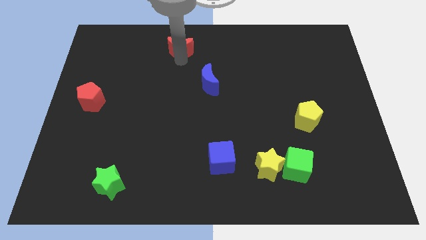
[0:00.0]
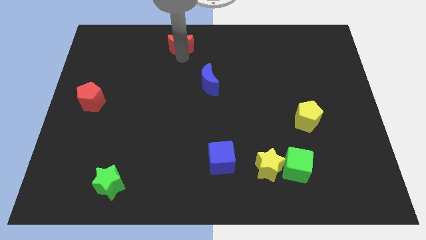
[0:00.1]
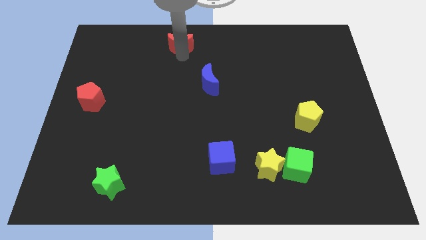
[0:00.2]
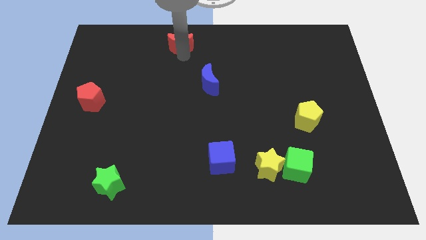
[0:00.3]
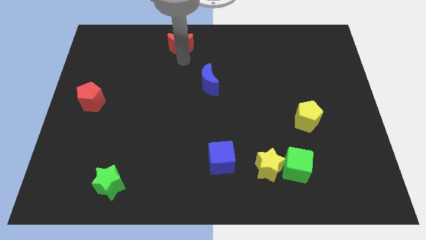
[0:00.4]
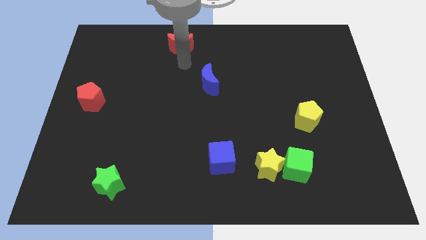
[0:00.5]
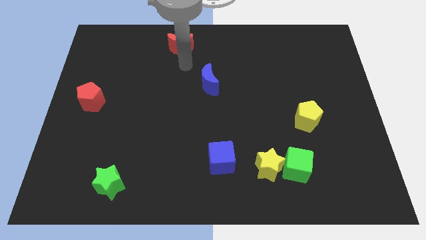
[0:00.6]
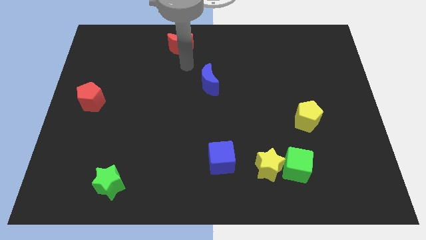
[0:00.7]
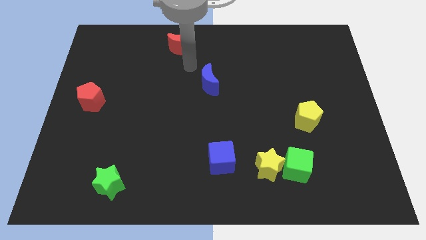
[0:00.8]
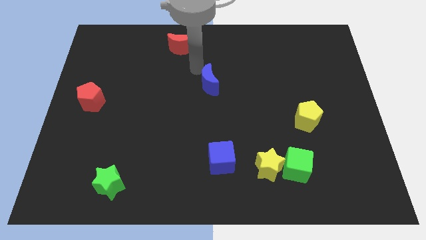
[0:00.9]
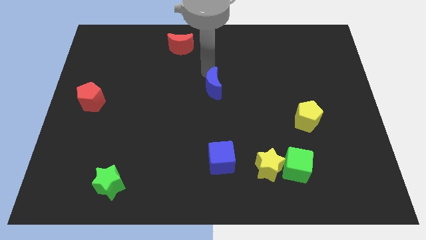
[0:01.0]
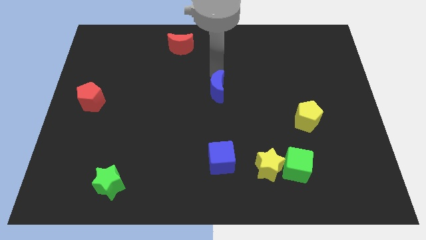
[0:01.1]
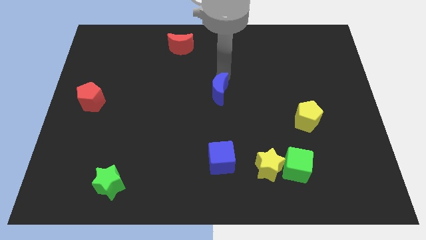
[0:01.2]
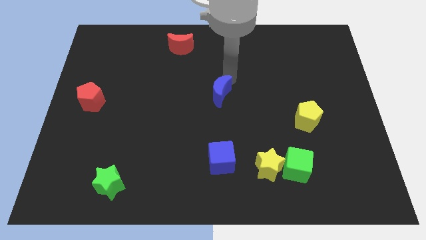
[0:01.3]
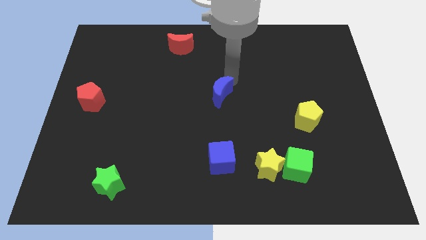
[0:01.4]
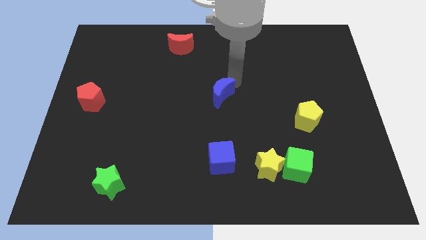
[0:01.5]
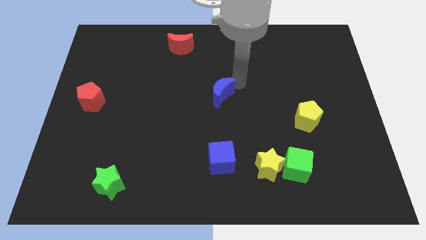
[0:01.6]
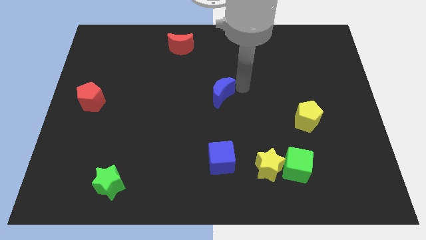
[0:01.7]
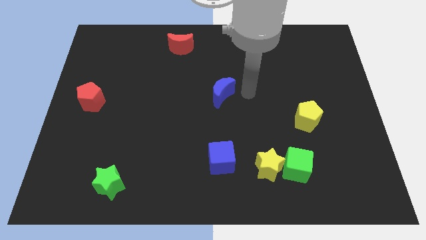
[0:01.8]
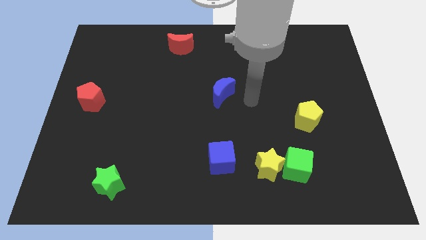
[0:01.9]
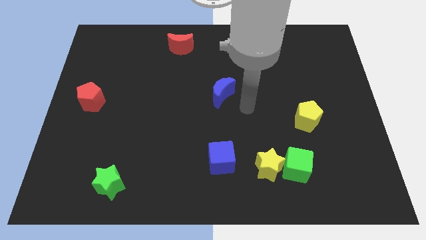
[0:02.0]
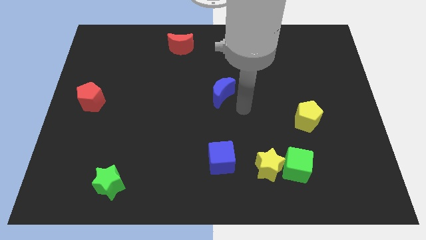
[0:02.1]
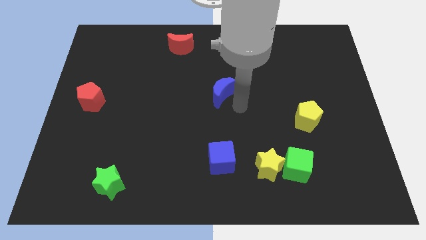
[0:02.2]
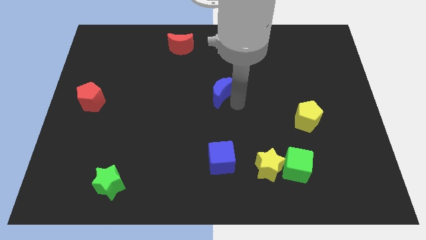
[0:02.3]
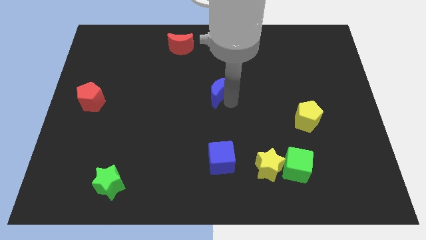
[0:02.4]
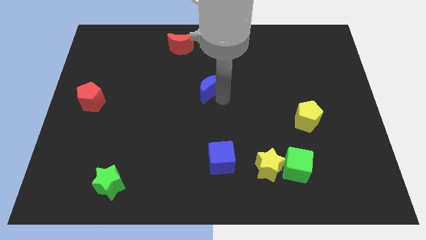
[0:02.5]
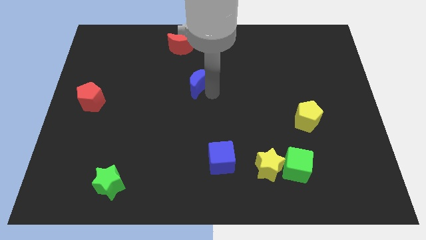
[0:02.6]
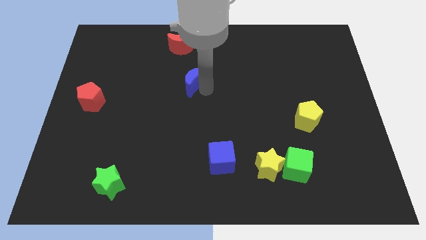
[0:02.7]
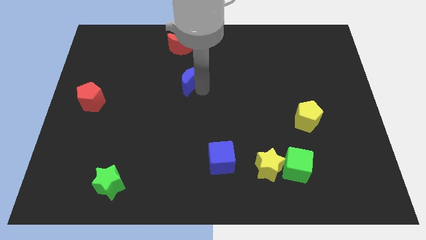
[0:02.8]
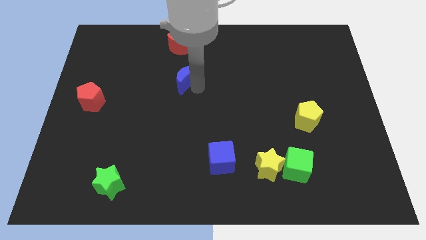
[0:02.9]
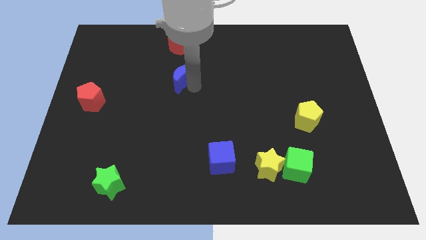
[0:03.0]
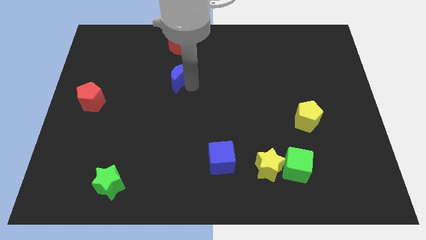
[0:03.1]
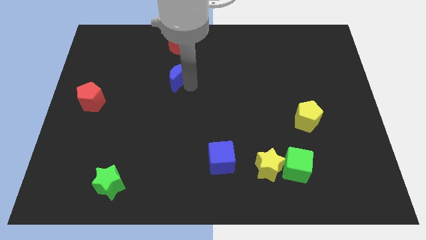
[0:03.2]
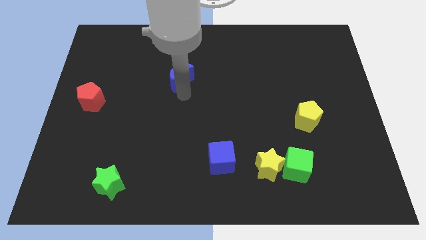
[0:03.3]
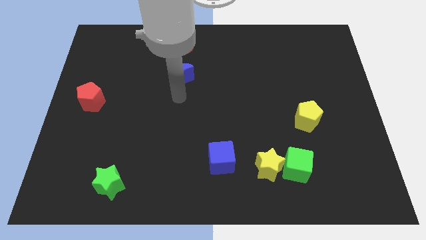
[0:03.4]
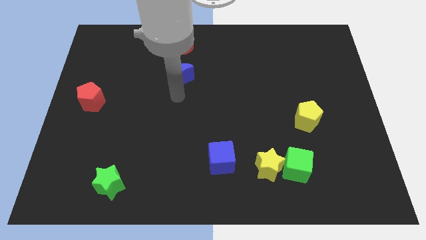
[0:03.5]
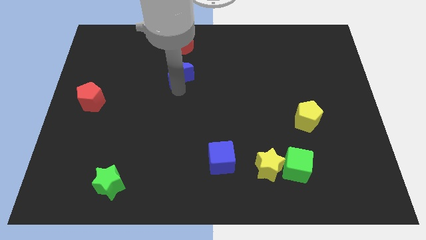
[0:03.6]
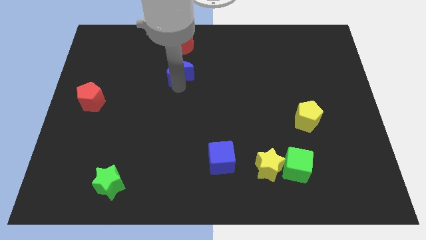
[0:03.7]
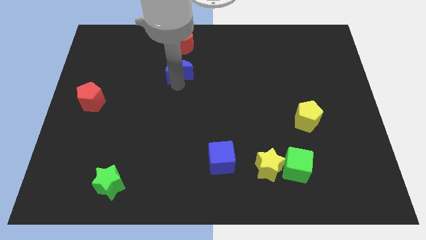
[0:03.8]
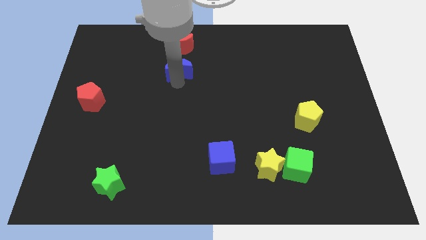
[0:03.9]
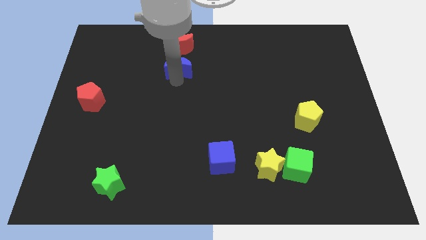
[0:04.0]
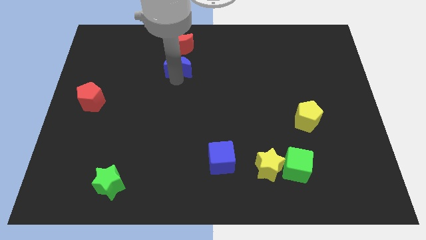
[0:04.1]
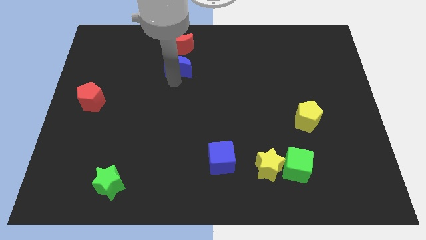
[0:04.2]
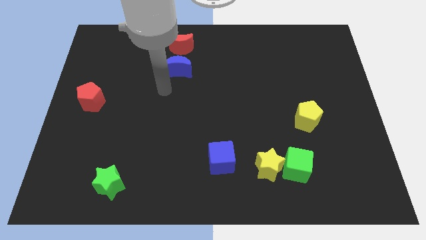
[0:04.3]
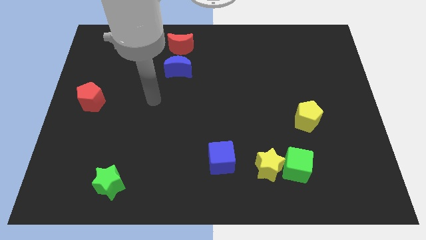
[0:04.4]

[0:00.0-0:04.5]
move the blue moon towards the red moon

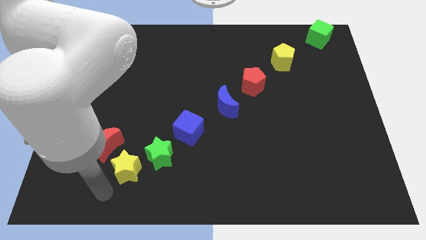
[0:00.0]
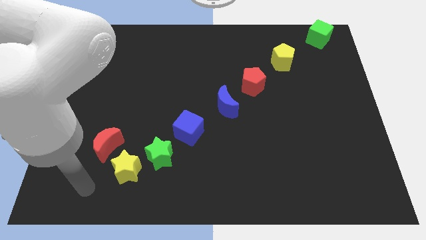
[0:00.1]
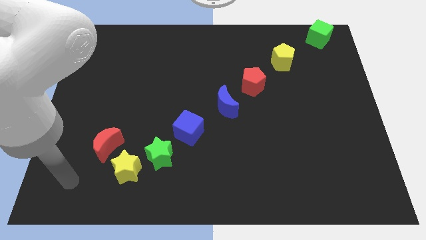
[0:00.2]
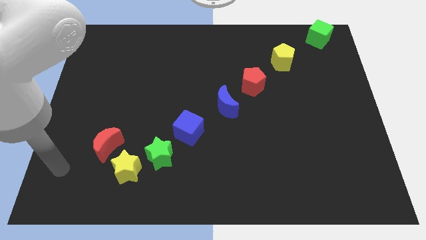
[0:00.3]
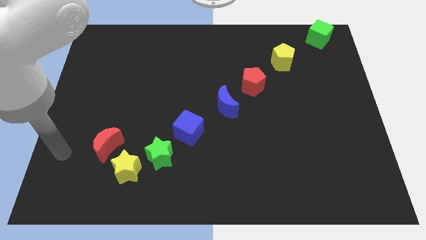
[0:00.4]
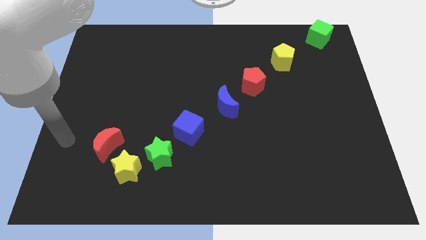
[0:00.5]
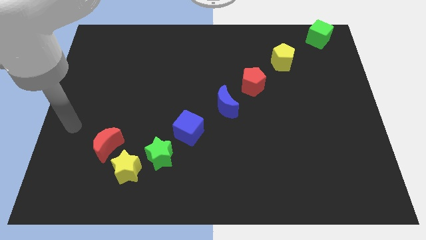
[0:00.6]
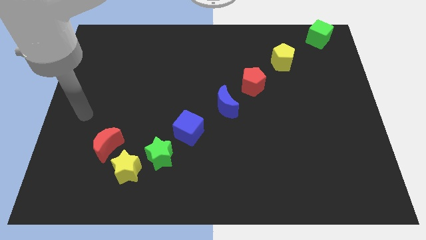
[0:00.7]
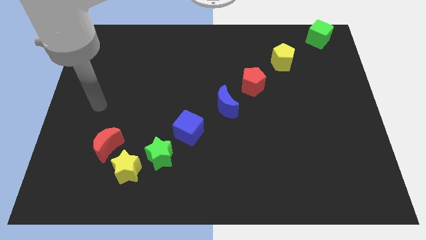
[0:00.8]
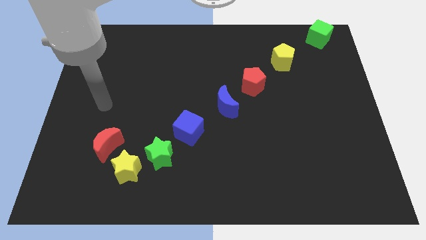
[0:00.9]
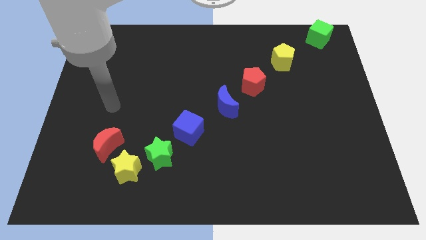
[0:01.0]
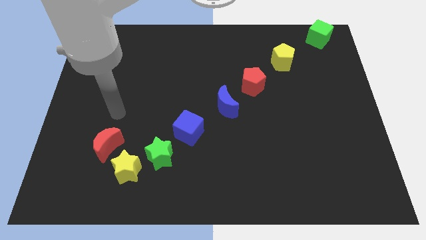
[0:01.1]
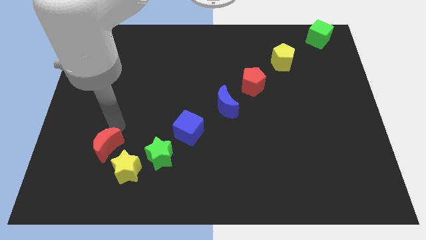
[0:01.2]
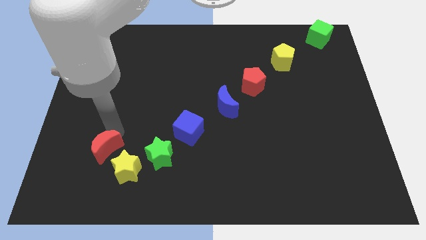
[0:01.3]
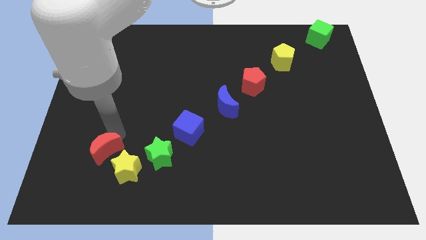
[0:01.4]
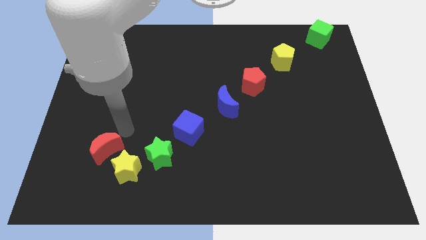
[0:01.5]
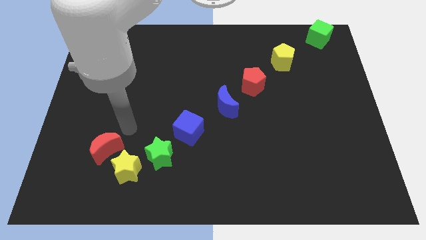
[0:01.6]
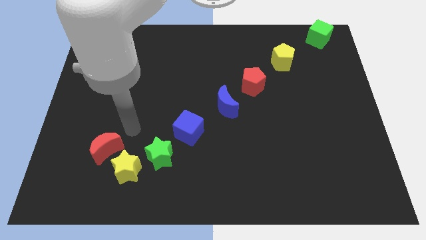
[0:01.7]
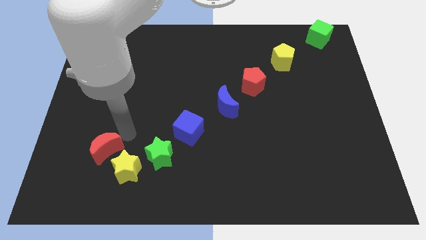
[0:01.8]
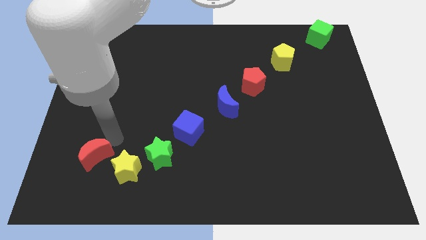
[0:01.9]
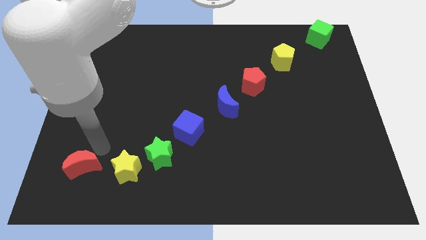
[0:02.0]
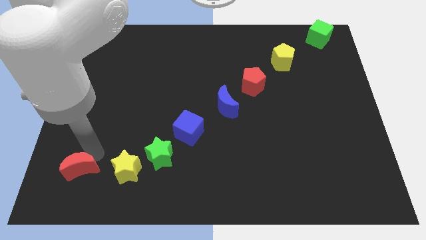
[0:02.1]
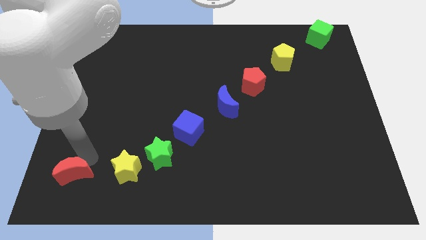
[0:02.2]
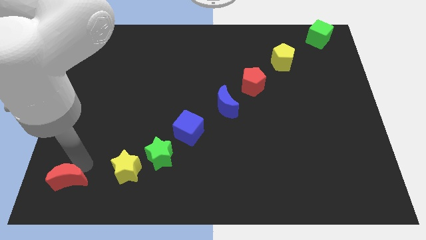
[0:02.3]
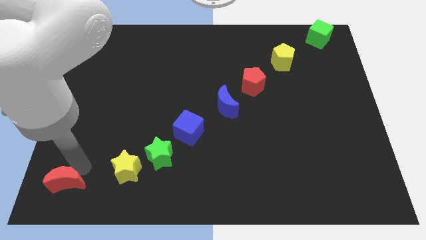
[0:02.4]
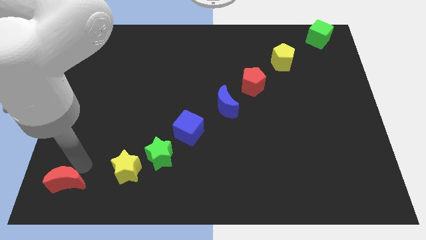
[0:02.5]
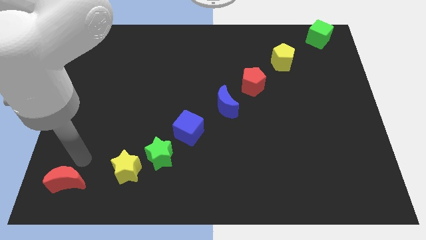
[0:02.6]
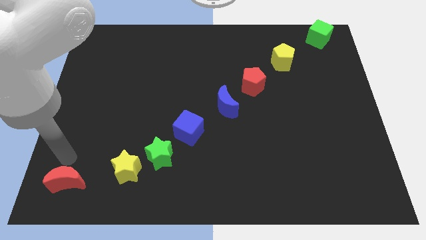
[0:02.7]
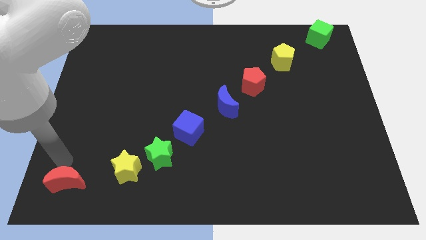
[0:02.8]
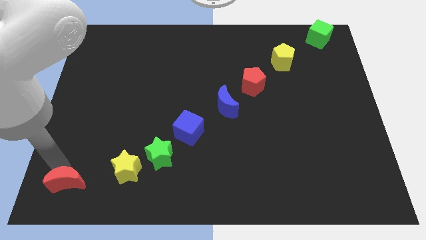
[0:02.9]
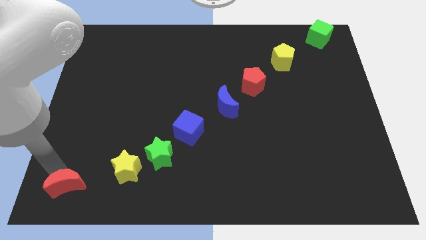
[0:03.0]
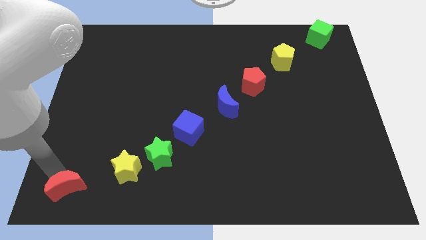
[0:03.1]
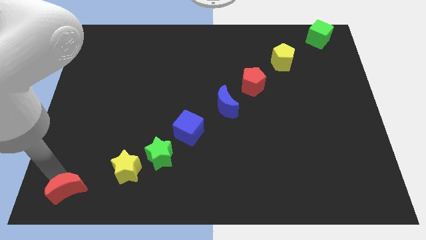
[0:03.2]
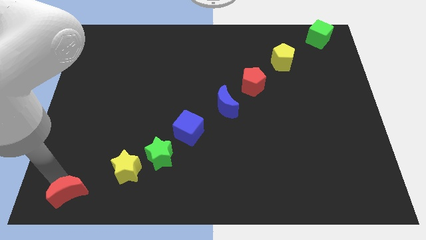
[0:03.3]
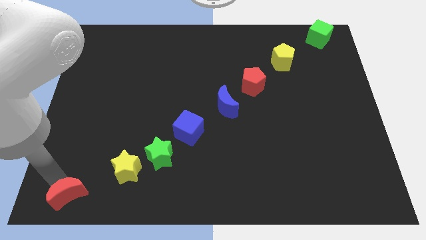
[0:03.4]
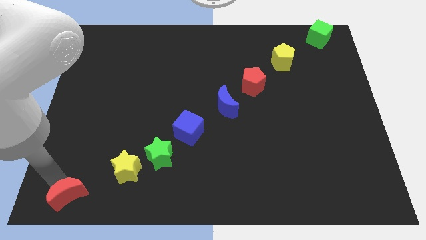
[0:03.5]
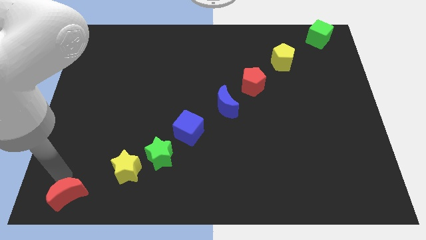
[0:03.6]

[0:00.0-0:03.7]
move the red crescent to the bottom left corner of the board

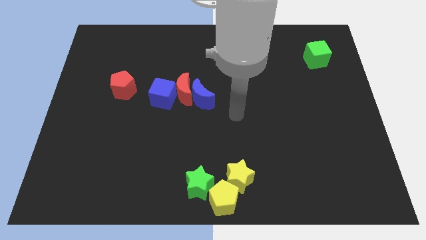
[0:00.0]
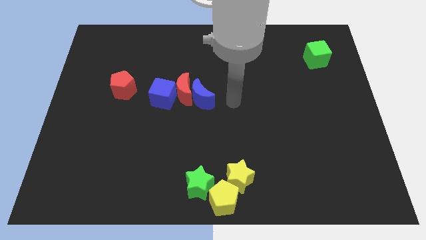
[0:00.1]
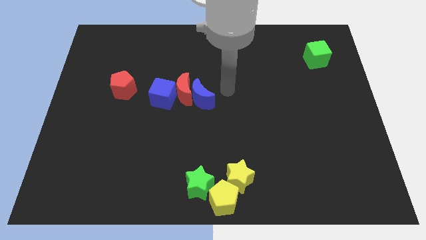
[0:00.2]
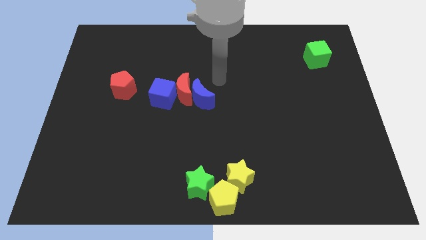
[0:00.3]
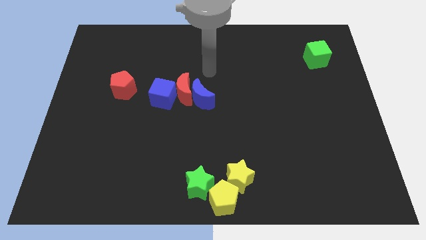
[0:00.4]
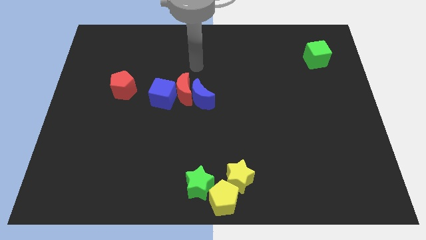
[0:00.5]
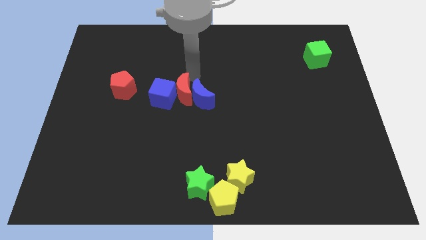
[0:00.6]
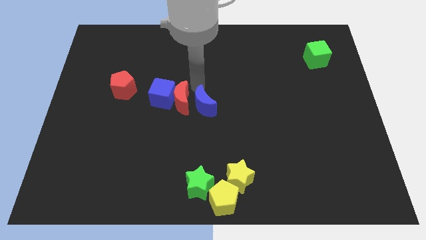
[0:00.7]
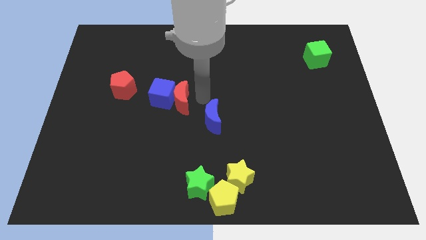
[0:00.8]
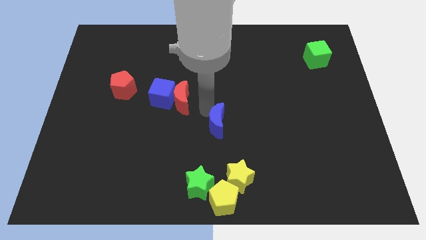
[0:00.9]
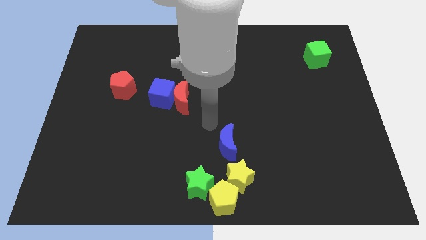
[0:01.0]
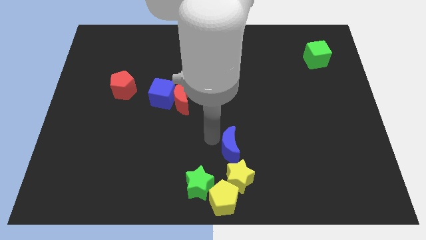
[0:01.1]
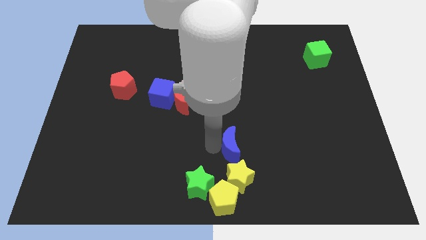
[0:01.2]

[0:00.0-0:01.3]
separate blue moon from red pentagon
